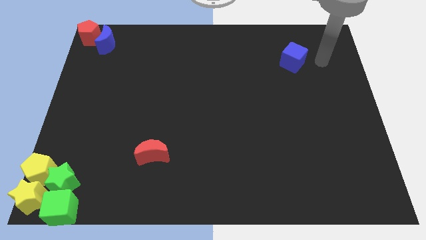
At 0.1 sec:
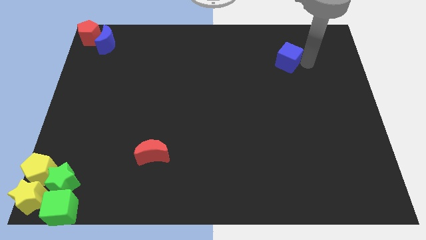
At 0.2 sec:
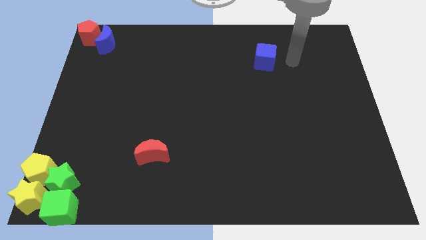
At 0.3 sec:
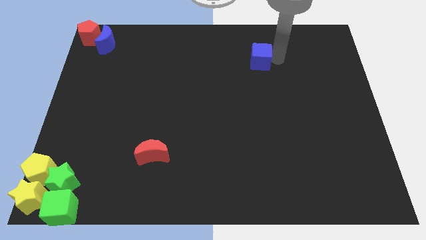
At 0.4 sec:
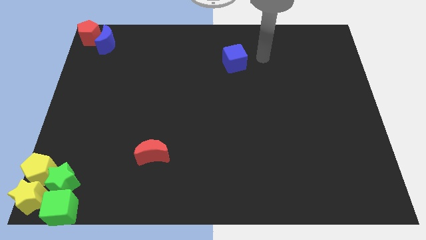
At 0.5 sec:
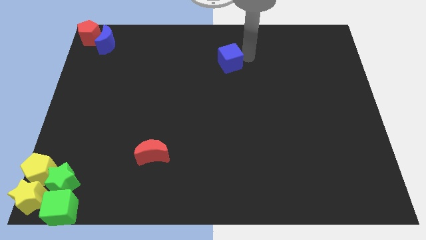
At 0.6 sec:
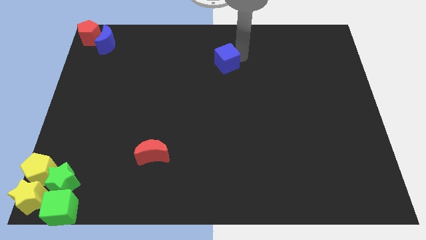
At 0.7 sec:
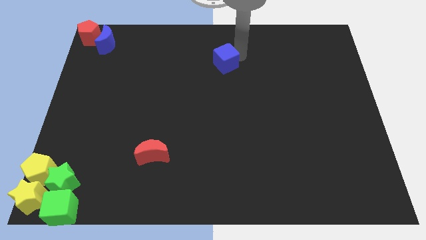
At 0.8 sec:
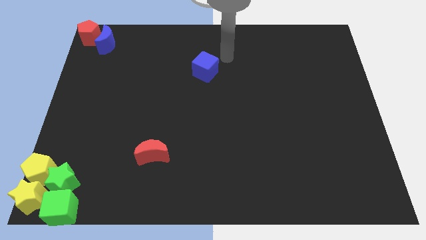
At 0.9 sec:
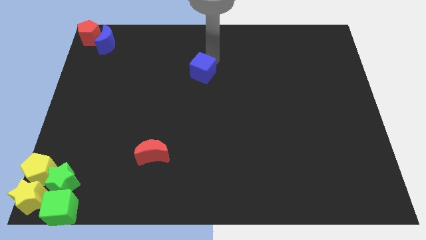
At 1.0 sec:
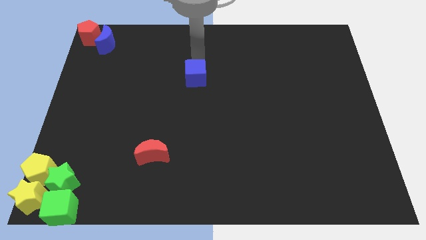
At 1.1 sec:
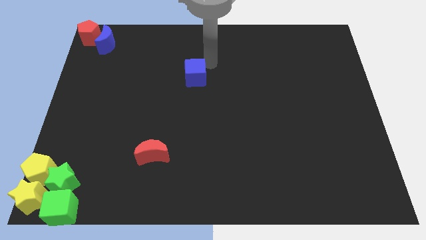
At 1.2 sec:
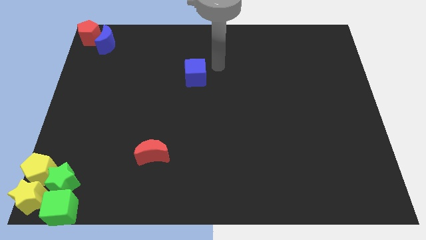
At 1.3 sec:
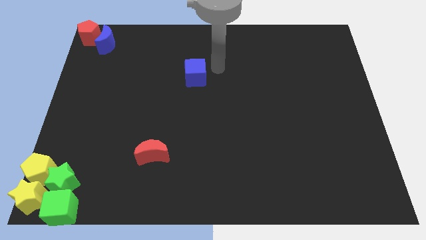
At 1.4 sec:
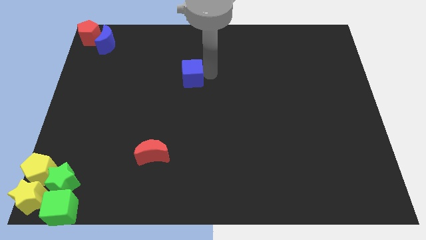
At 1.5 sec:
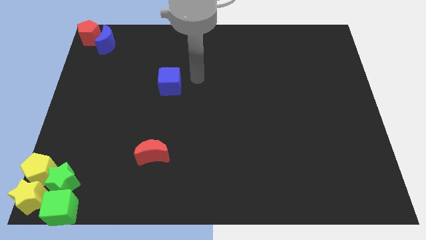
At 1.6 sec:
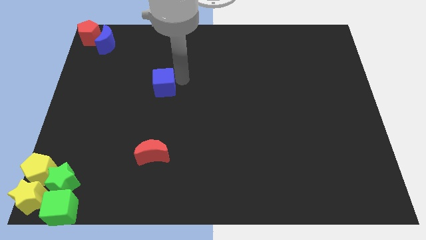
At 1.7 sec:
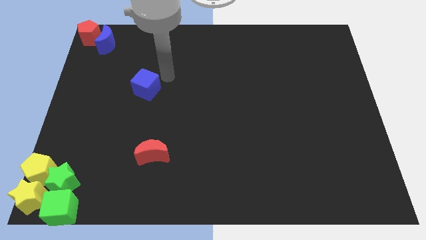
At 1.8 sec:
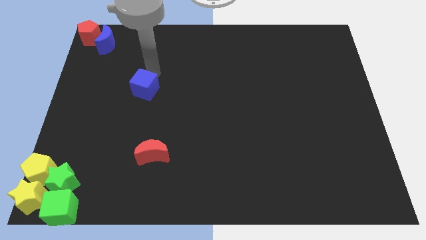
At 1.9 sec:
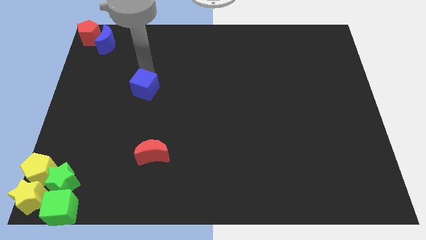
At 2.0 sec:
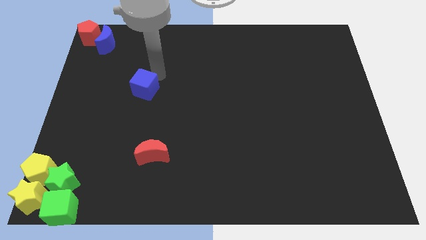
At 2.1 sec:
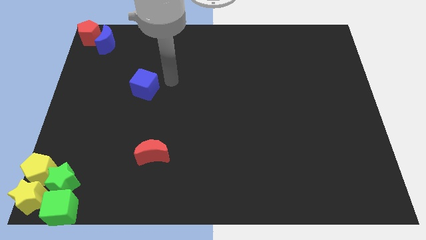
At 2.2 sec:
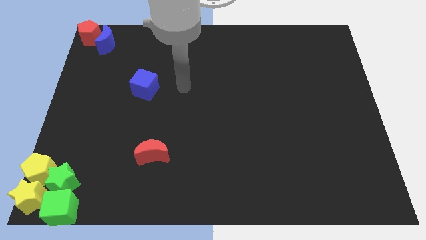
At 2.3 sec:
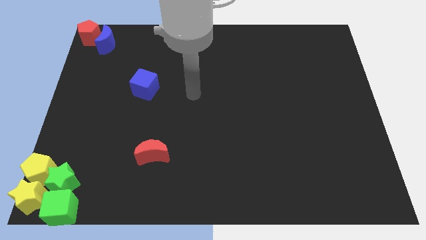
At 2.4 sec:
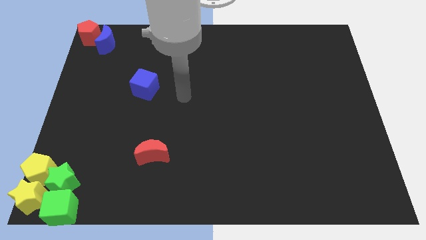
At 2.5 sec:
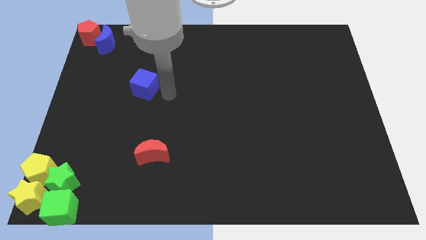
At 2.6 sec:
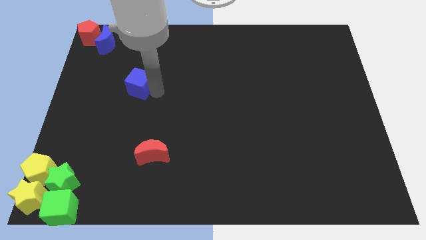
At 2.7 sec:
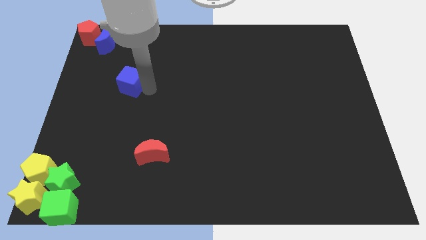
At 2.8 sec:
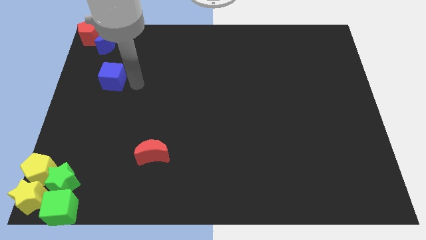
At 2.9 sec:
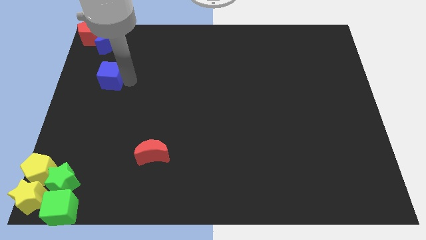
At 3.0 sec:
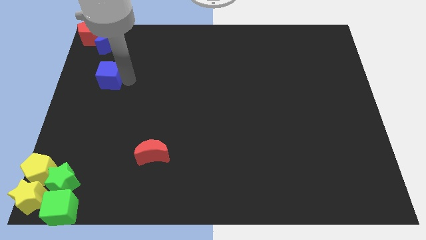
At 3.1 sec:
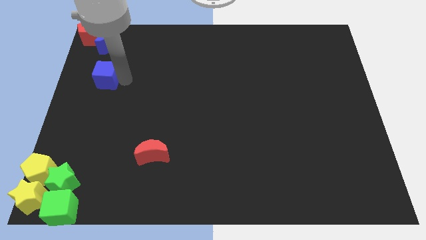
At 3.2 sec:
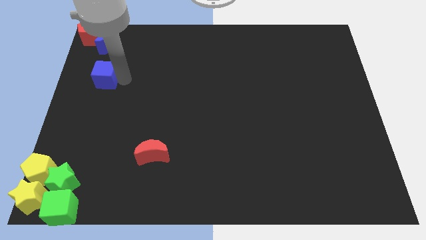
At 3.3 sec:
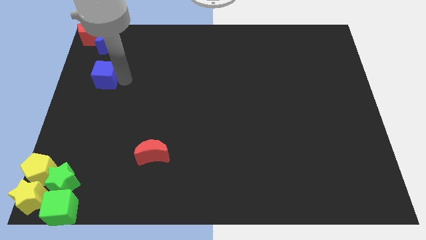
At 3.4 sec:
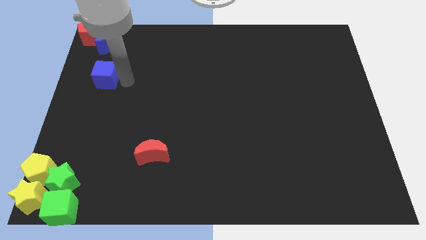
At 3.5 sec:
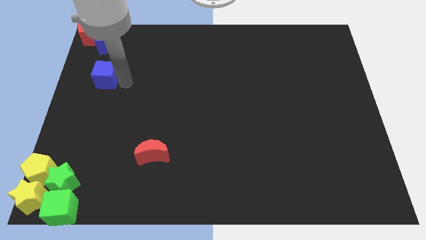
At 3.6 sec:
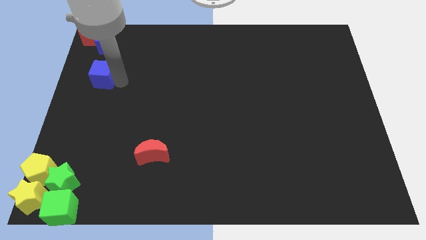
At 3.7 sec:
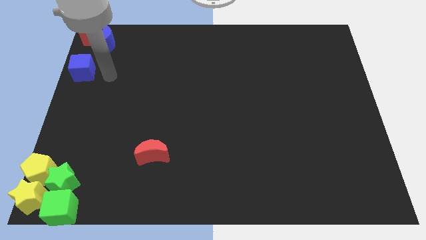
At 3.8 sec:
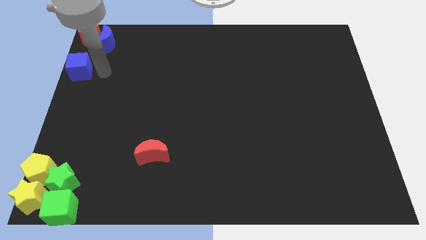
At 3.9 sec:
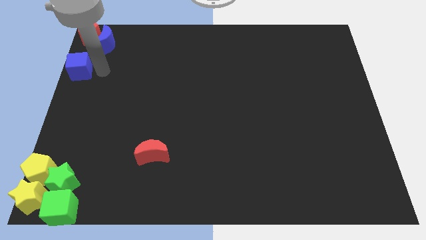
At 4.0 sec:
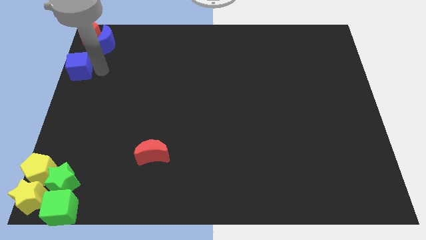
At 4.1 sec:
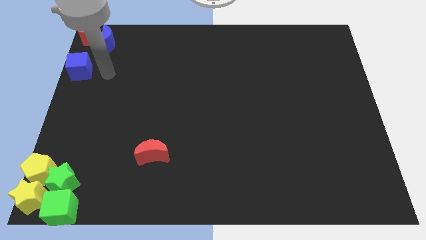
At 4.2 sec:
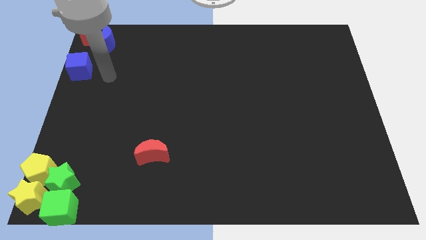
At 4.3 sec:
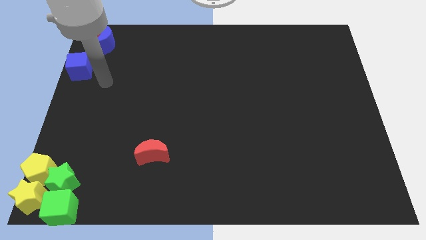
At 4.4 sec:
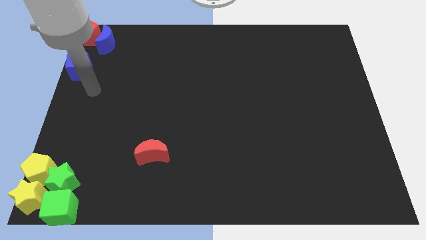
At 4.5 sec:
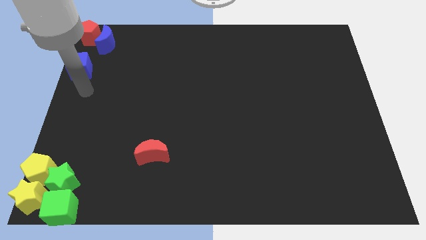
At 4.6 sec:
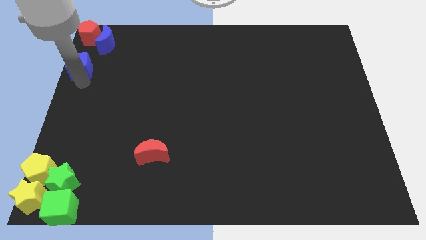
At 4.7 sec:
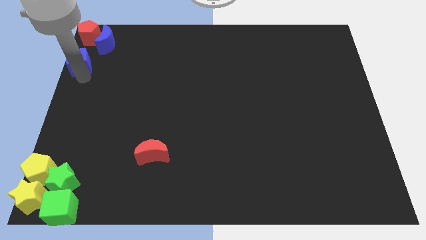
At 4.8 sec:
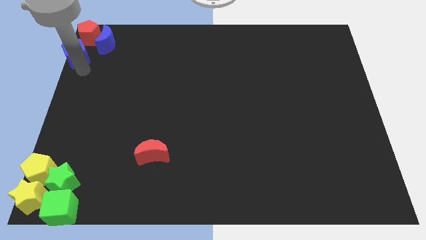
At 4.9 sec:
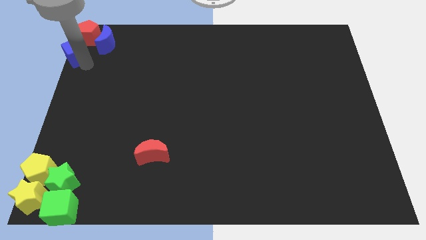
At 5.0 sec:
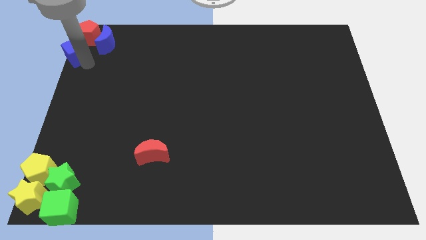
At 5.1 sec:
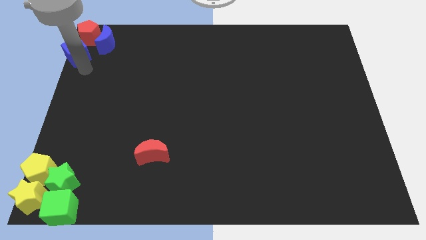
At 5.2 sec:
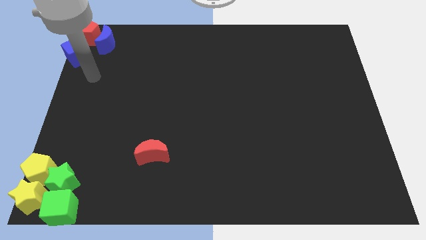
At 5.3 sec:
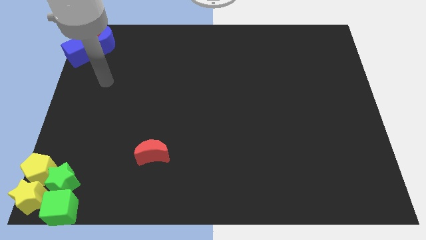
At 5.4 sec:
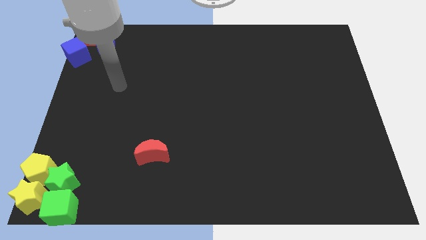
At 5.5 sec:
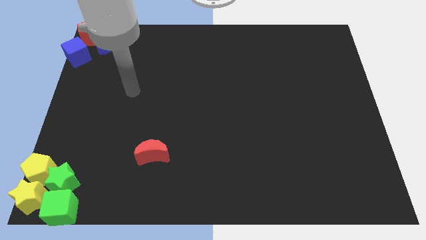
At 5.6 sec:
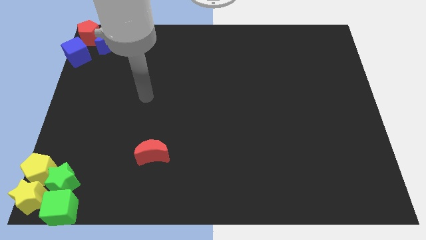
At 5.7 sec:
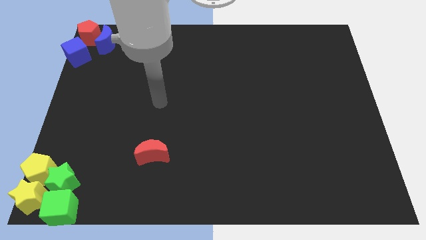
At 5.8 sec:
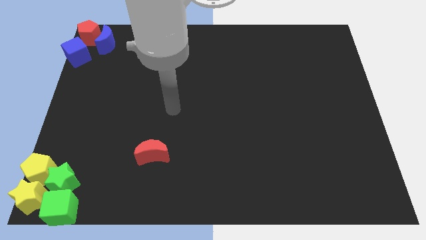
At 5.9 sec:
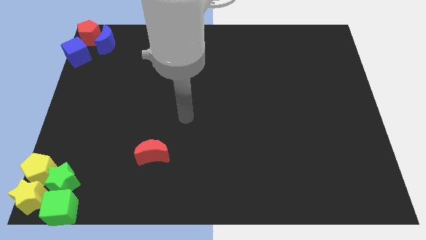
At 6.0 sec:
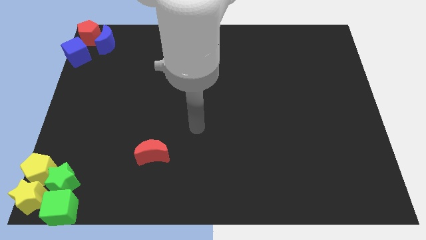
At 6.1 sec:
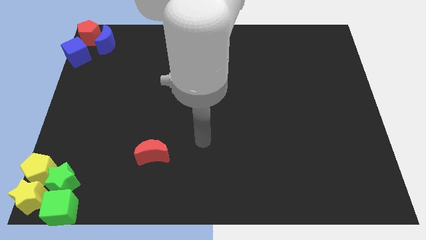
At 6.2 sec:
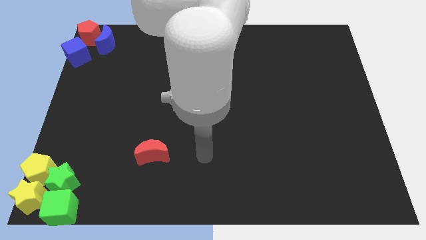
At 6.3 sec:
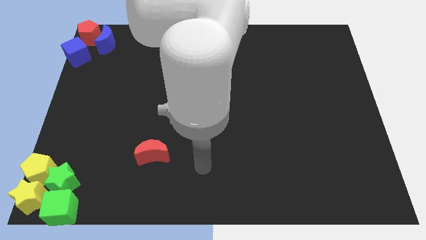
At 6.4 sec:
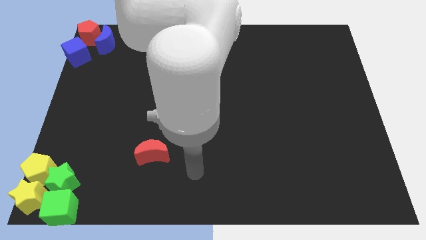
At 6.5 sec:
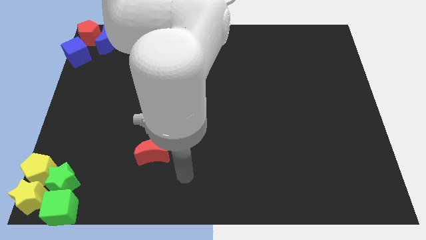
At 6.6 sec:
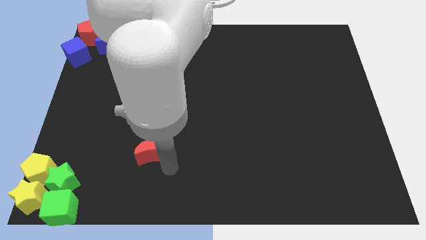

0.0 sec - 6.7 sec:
place the blue cube to left side of red pentagon

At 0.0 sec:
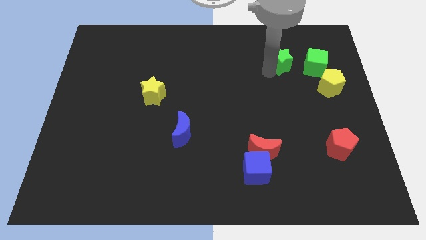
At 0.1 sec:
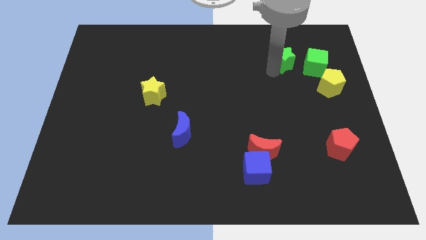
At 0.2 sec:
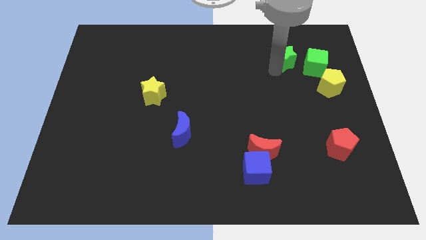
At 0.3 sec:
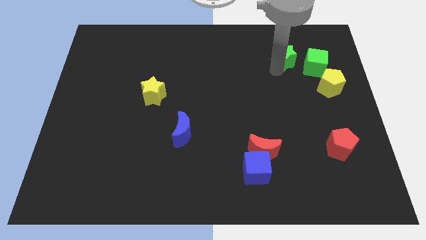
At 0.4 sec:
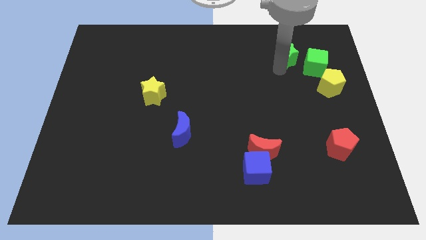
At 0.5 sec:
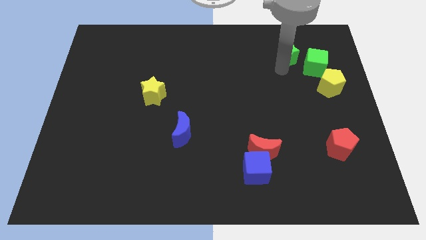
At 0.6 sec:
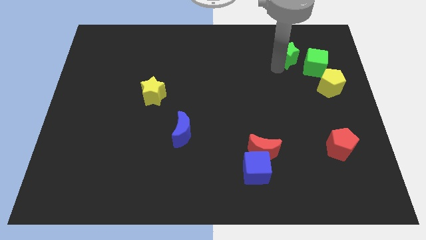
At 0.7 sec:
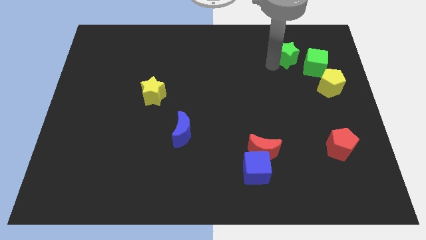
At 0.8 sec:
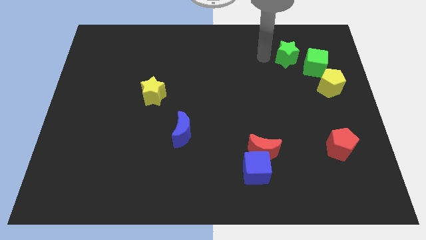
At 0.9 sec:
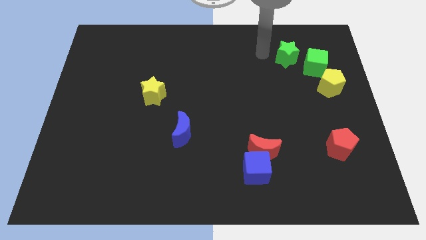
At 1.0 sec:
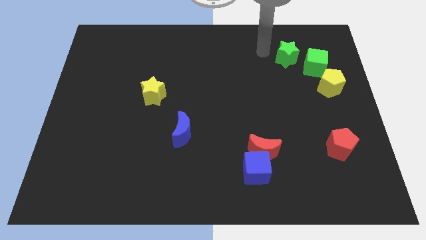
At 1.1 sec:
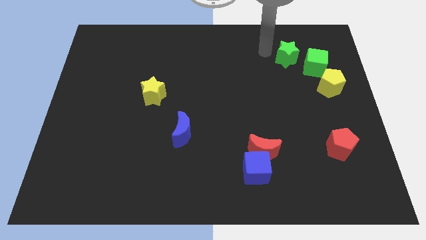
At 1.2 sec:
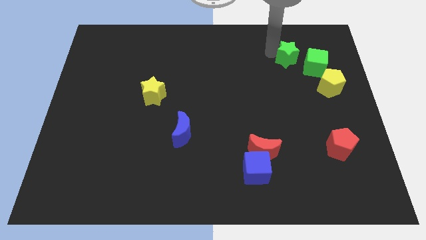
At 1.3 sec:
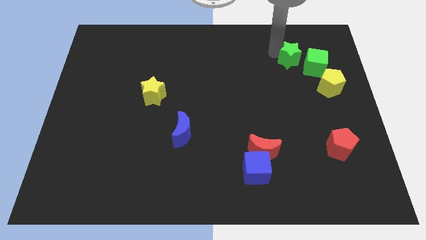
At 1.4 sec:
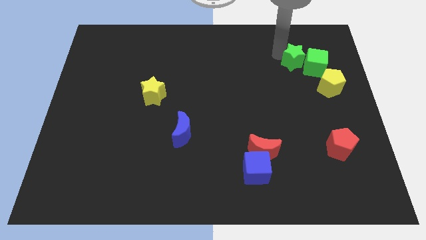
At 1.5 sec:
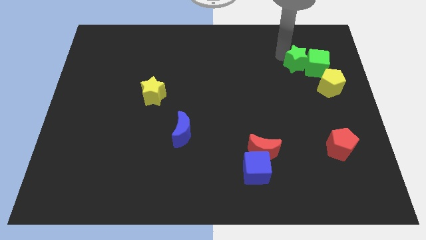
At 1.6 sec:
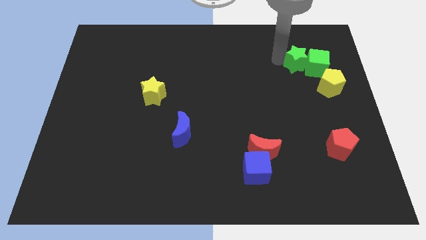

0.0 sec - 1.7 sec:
move green star close to green cube

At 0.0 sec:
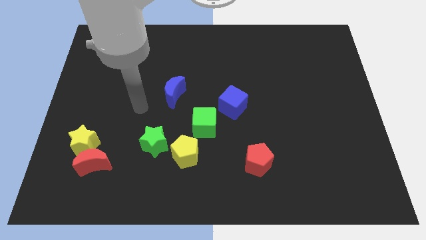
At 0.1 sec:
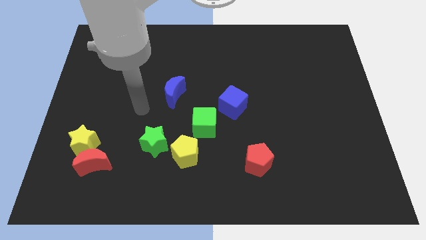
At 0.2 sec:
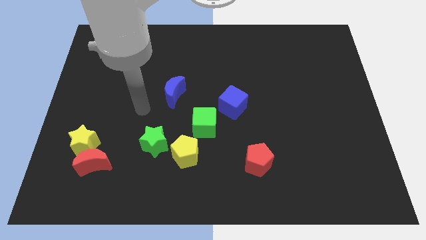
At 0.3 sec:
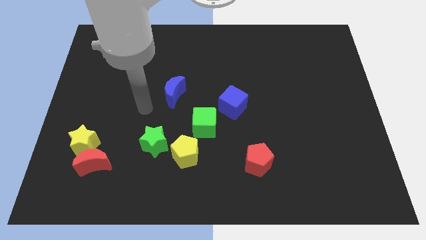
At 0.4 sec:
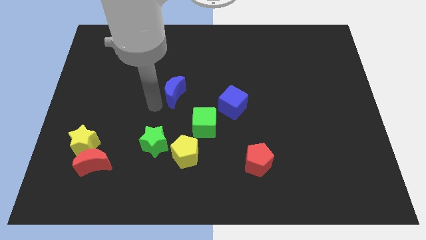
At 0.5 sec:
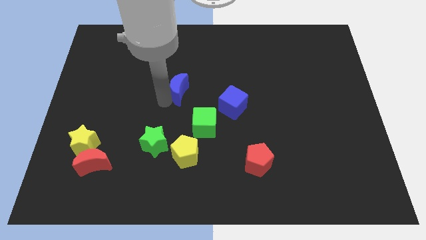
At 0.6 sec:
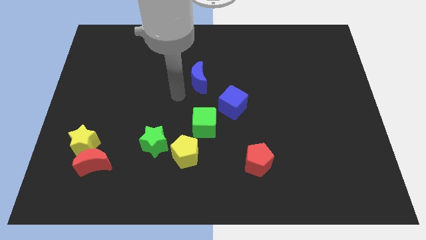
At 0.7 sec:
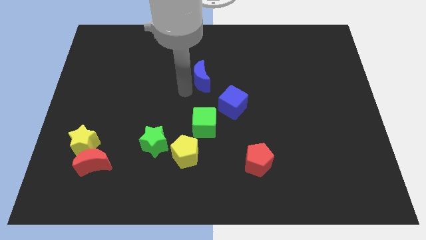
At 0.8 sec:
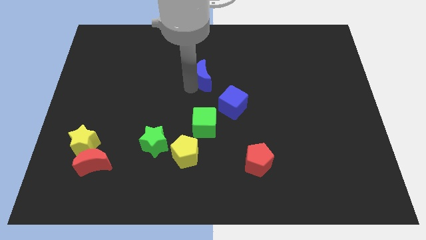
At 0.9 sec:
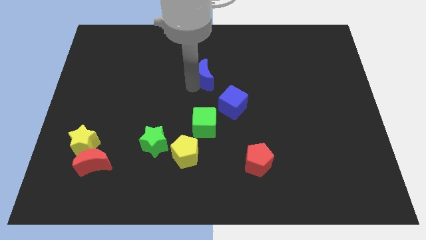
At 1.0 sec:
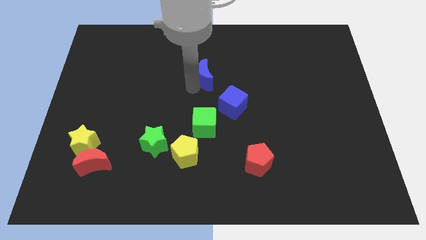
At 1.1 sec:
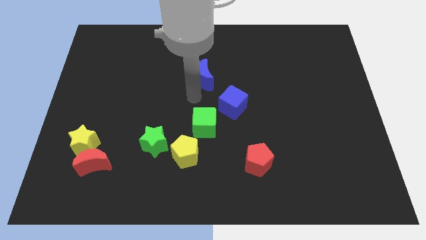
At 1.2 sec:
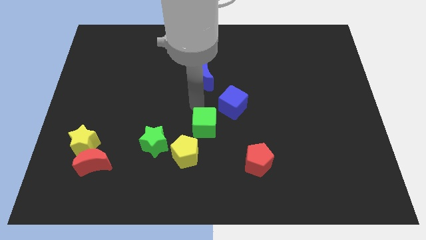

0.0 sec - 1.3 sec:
push the blue crescent to the top side of the green cube
